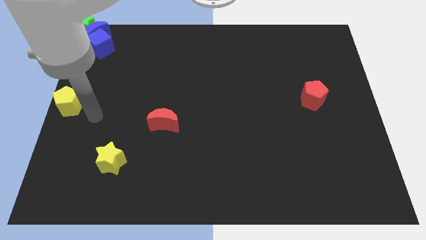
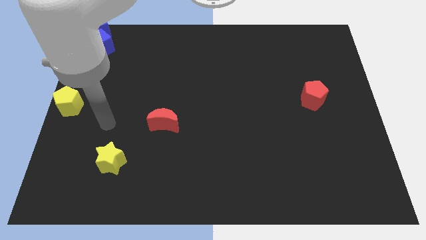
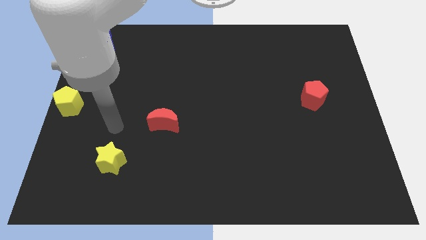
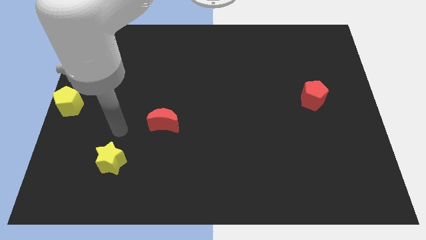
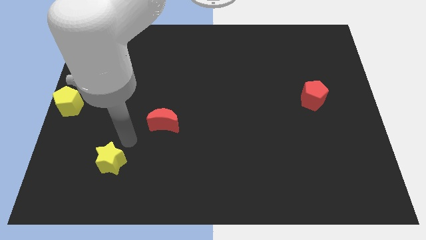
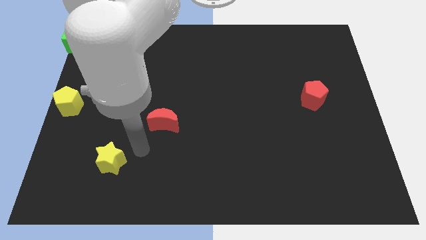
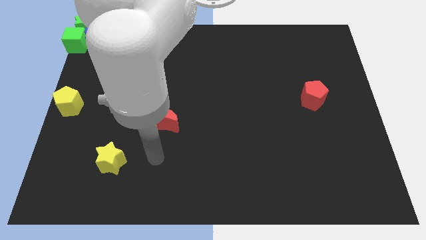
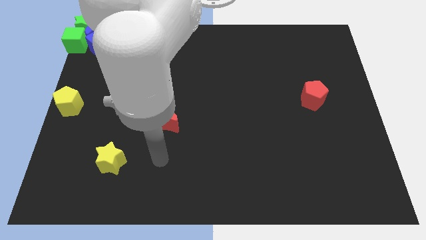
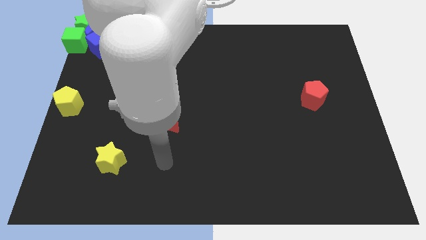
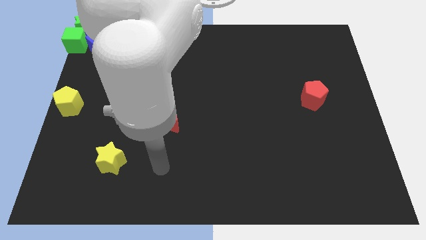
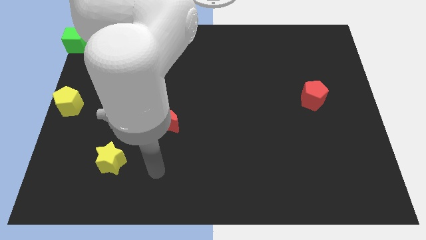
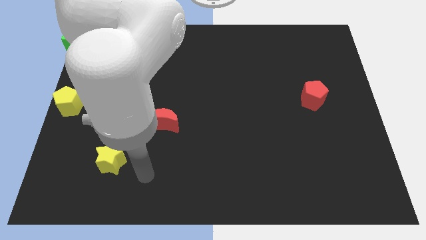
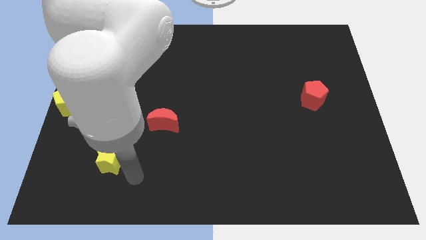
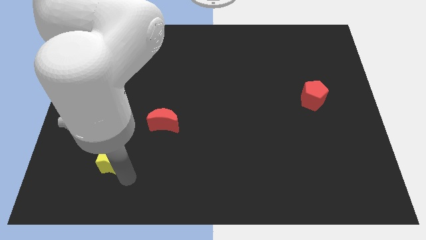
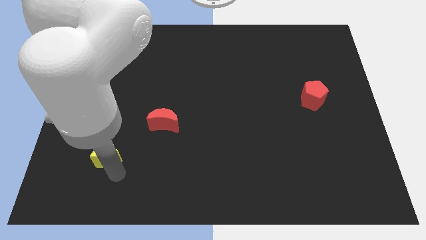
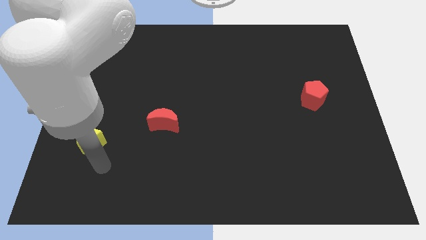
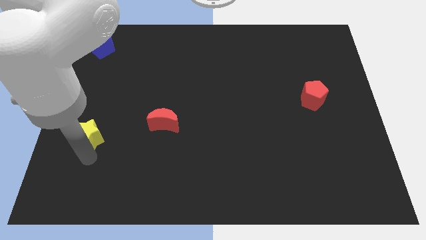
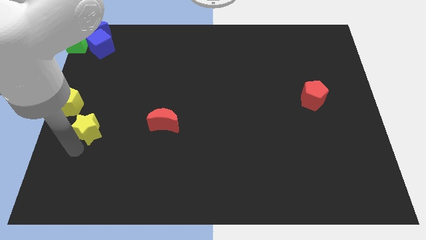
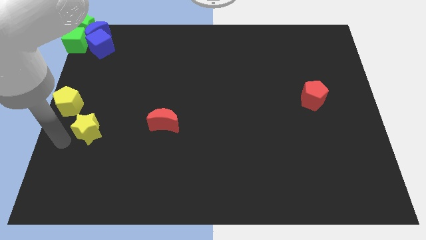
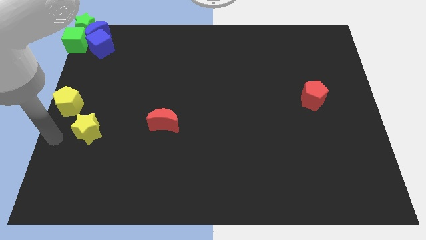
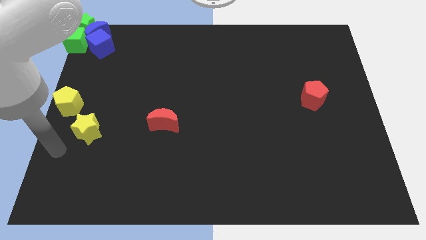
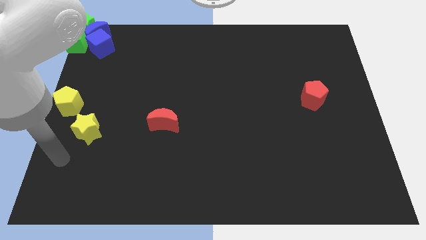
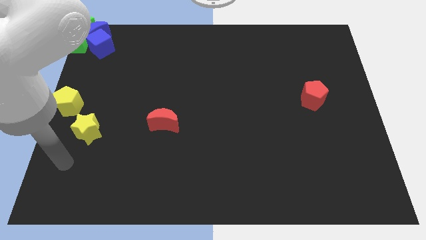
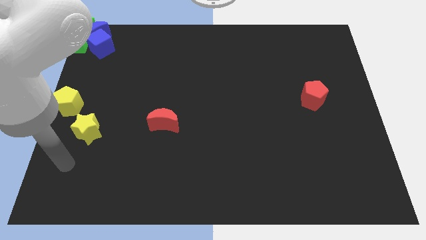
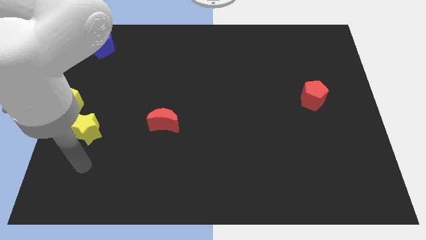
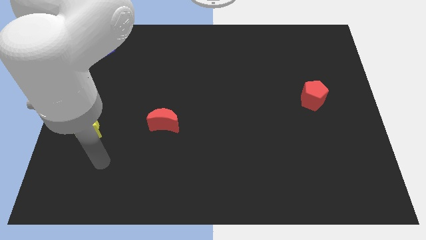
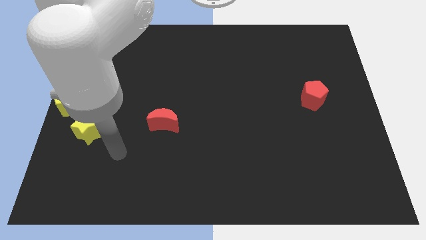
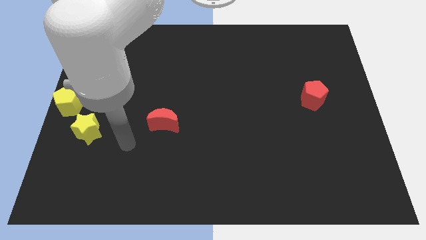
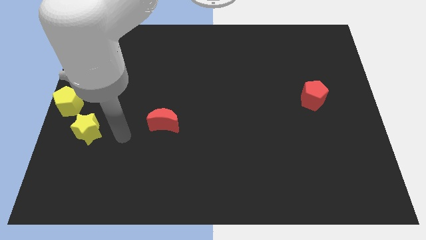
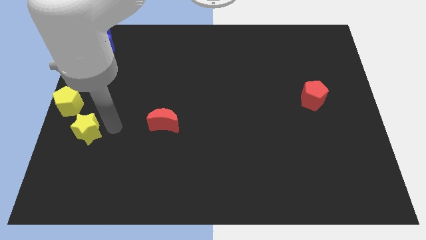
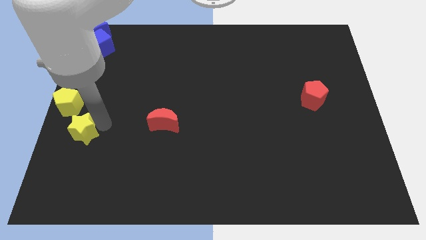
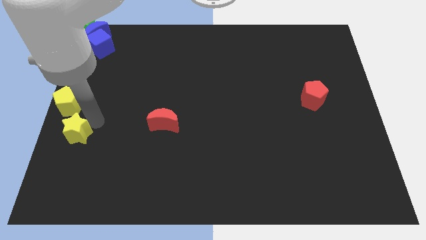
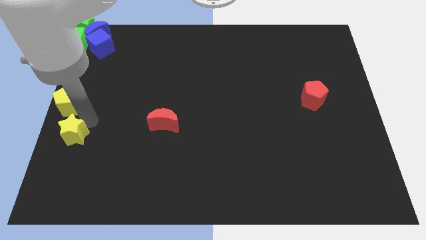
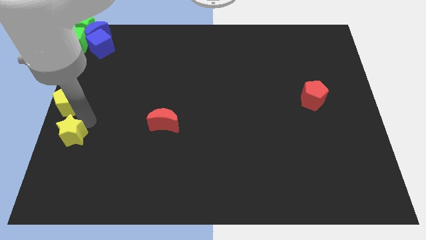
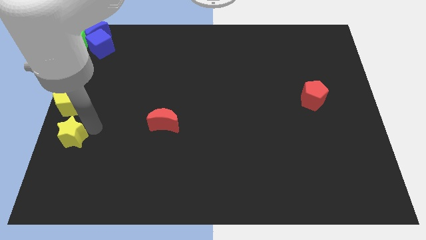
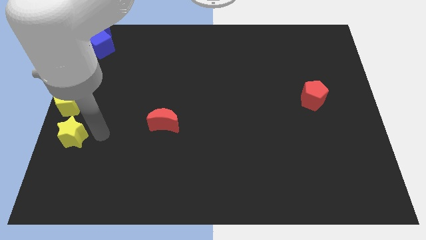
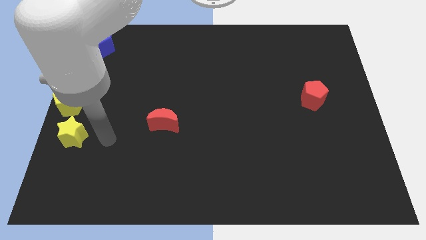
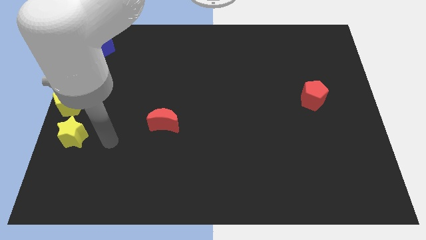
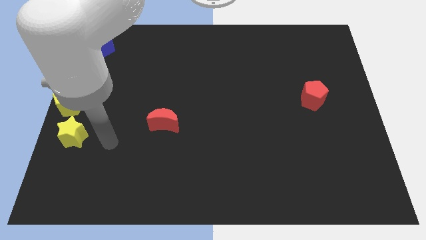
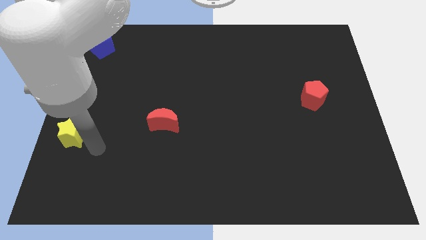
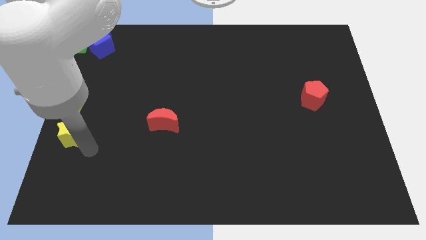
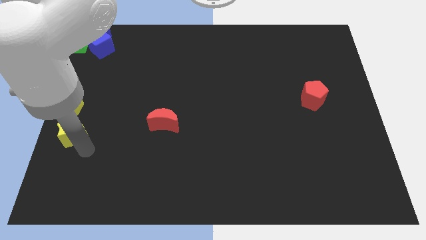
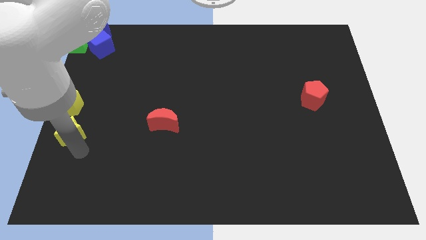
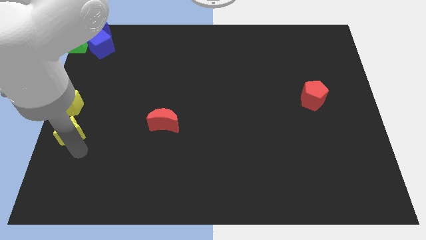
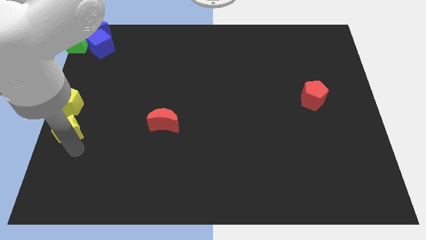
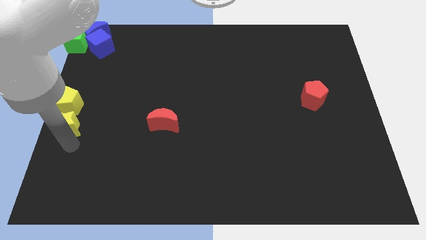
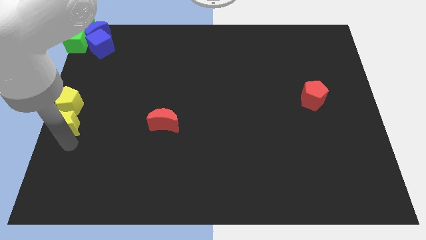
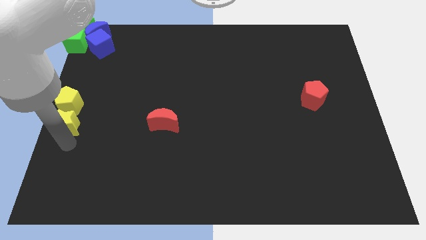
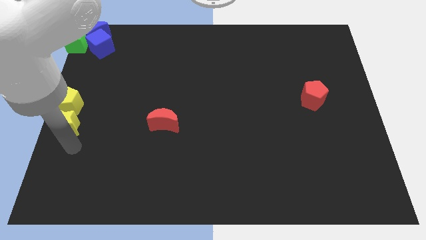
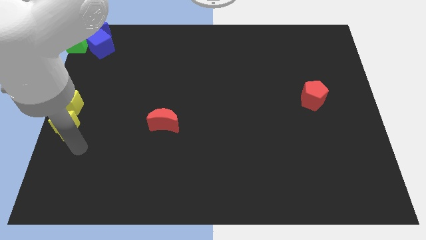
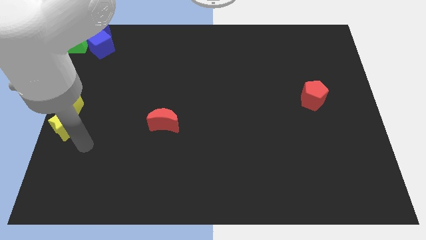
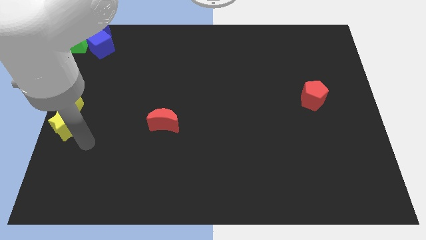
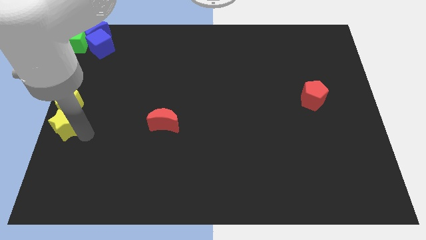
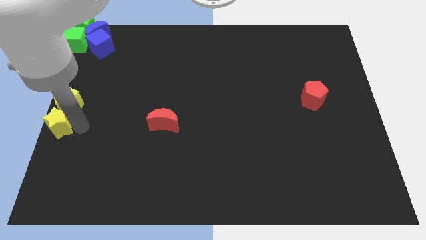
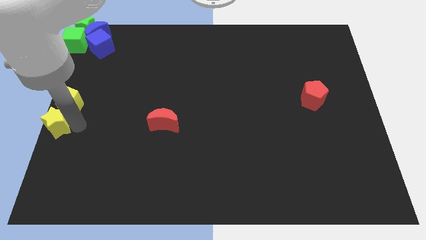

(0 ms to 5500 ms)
move the yellow star at the bottom side of the yellow pentagon

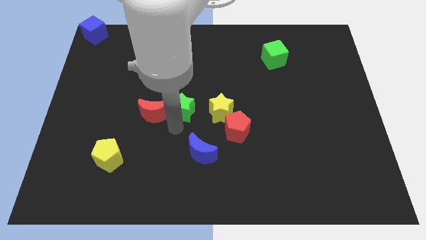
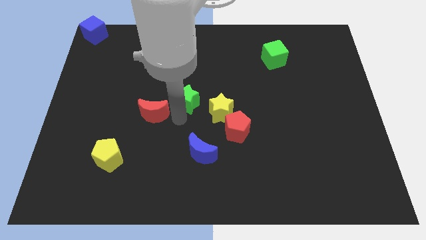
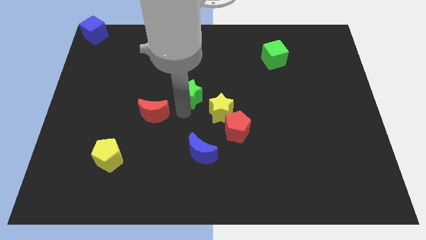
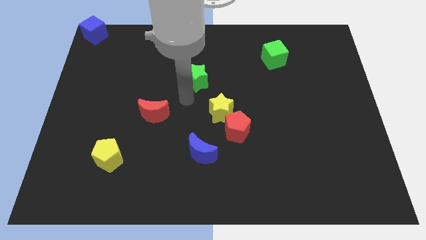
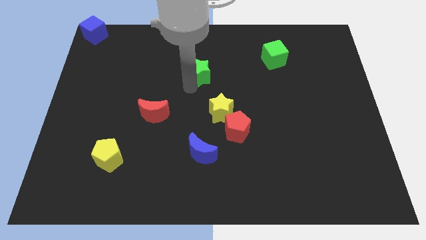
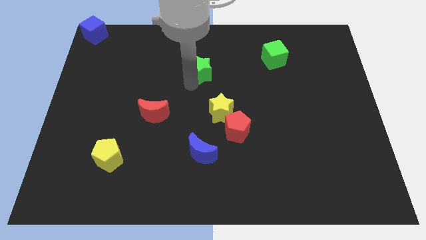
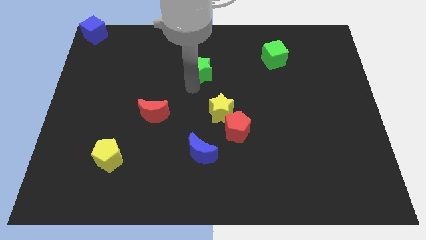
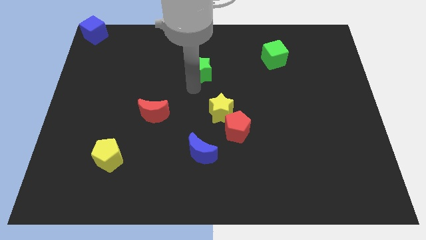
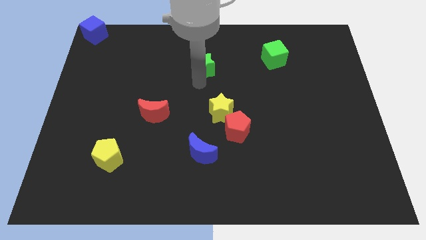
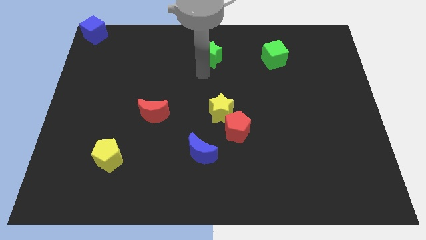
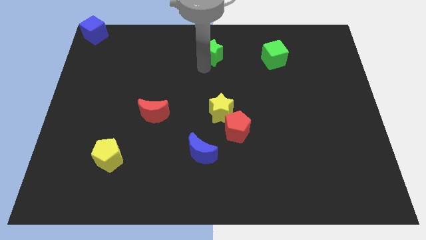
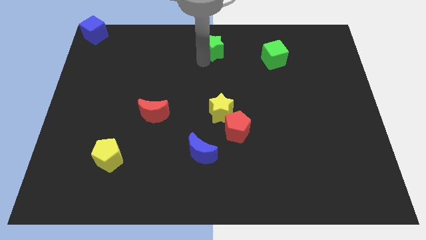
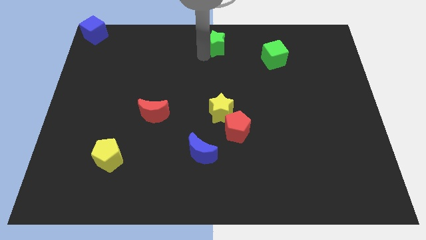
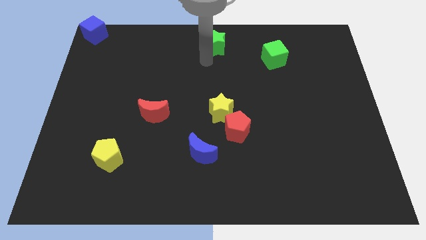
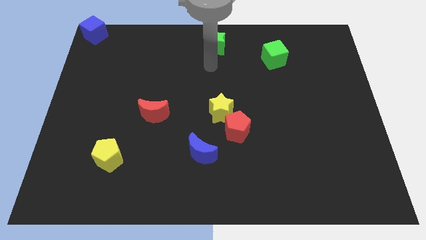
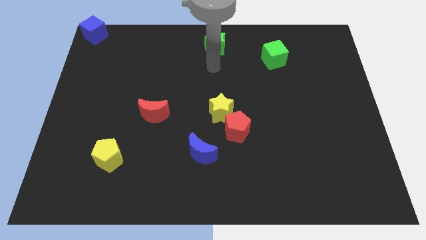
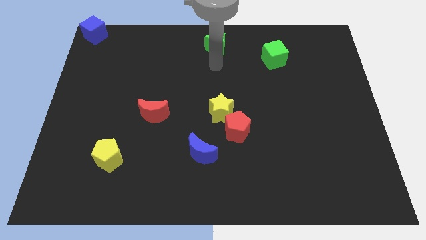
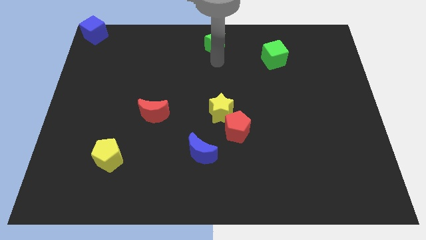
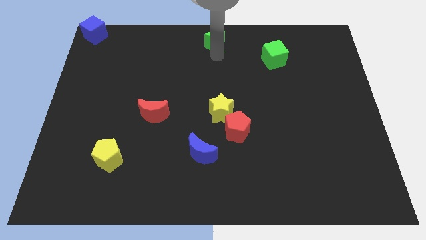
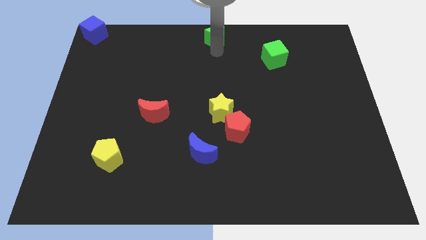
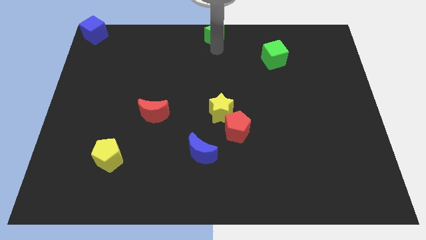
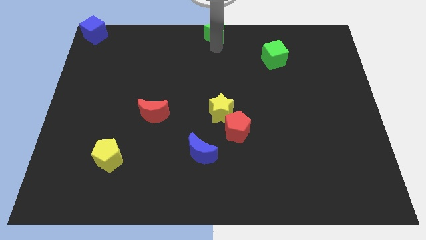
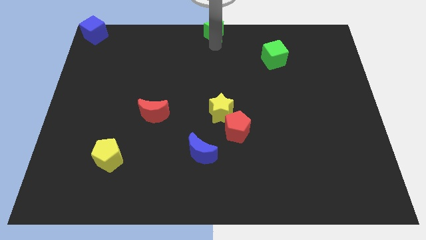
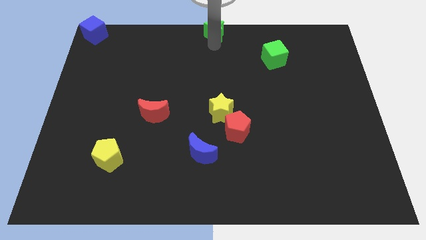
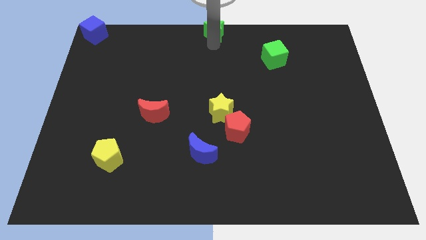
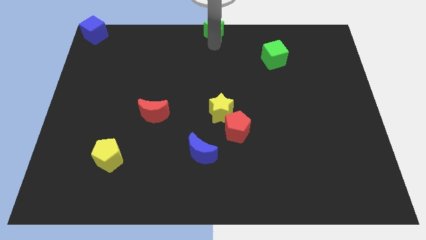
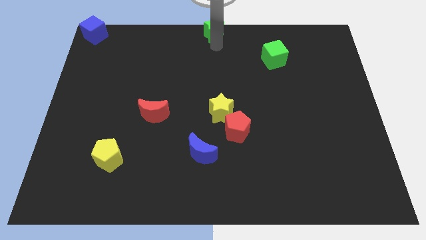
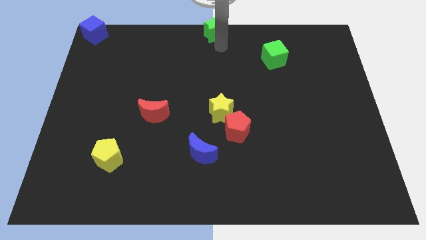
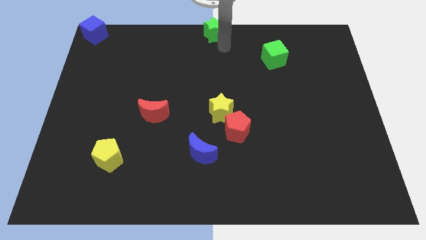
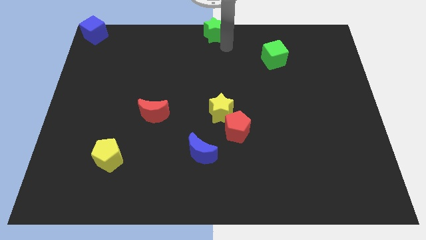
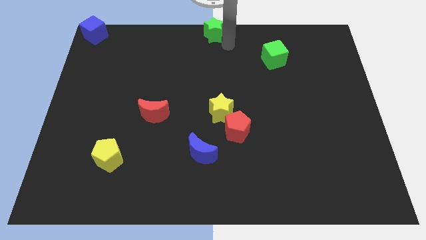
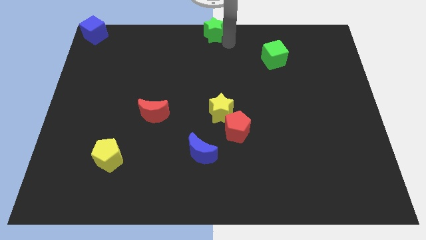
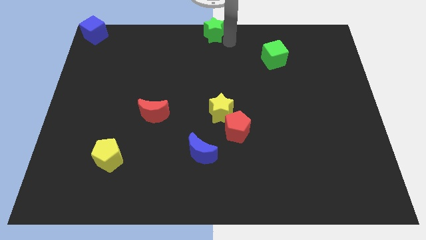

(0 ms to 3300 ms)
push green star towards top middle of the board

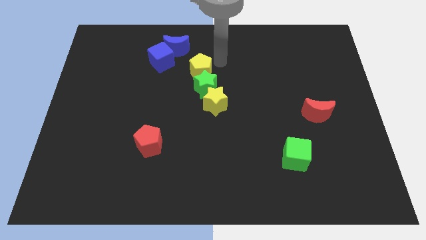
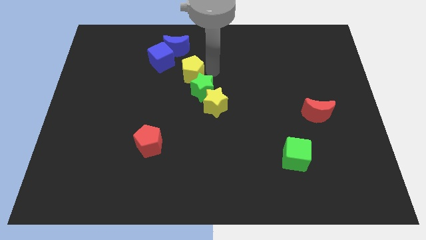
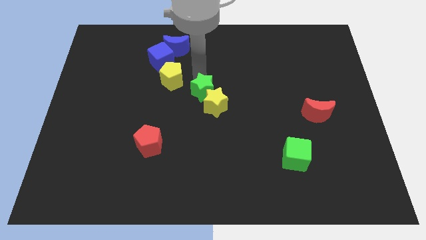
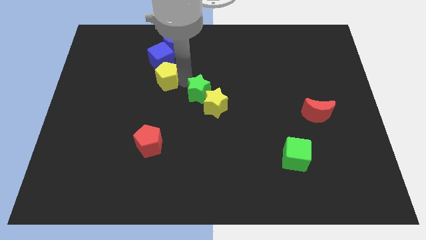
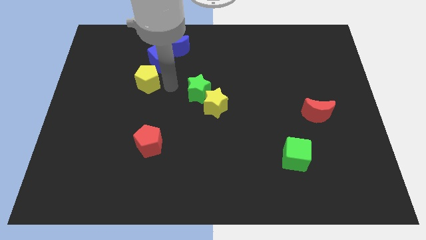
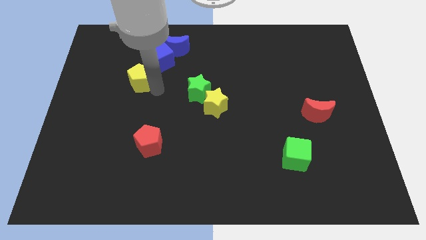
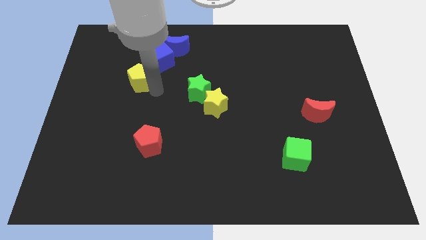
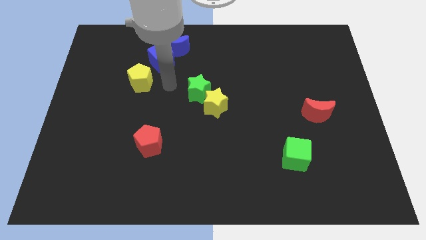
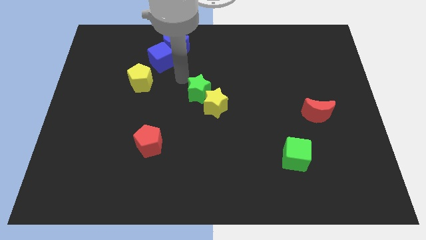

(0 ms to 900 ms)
place the yellow pentagon below the blue cube
